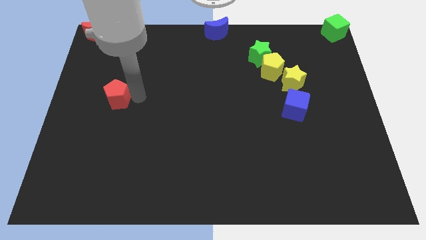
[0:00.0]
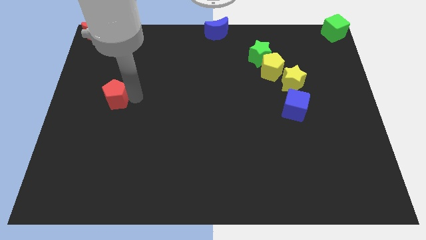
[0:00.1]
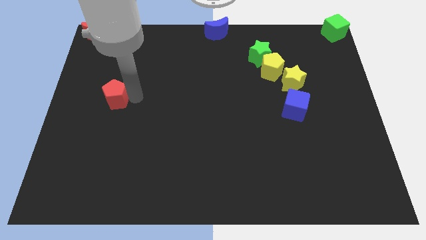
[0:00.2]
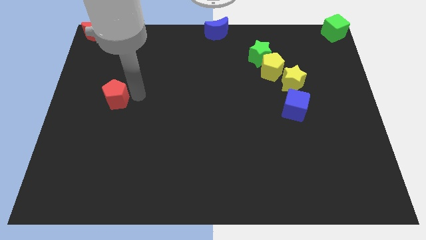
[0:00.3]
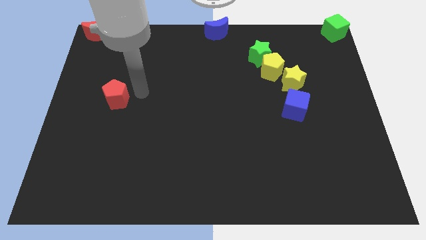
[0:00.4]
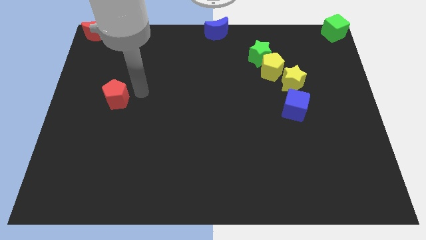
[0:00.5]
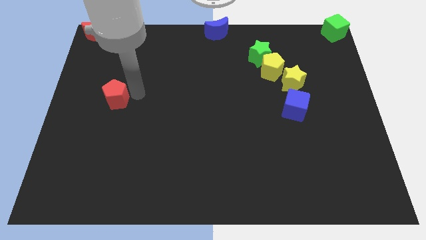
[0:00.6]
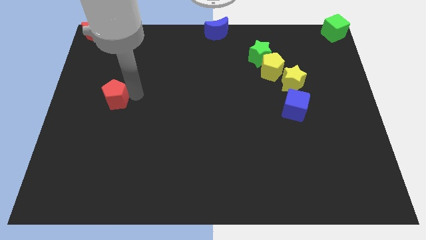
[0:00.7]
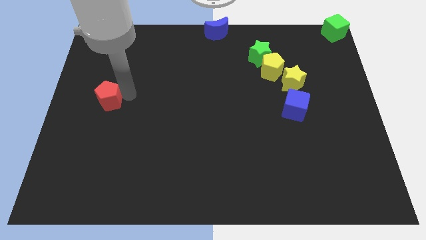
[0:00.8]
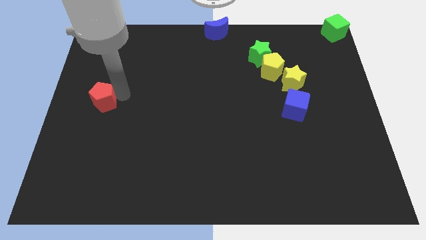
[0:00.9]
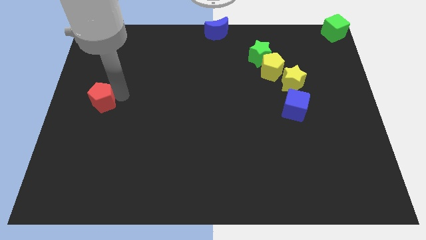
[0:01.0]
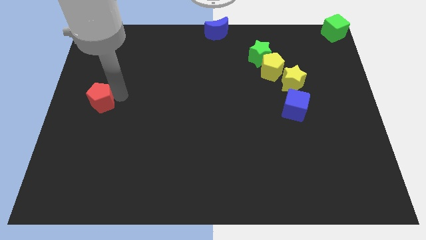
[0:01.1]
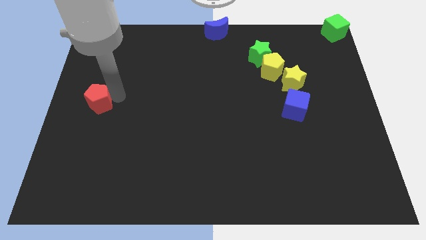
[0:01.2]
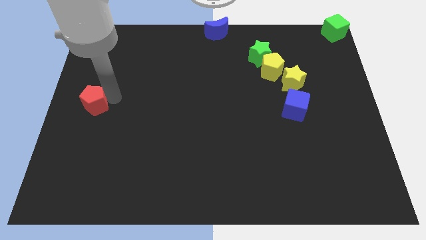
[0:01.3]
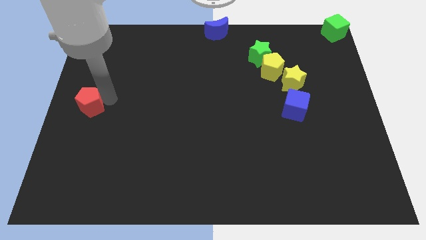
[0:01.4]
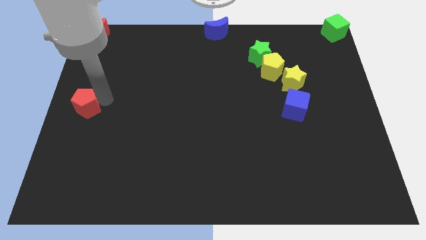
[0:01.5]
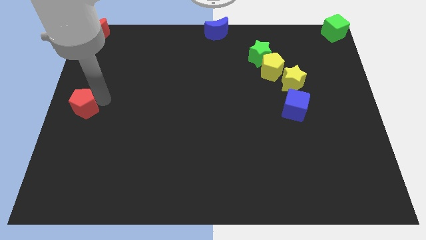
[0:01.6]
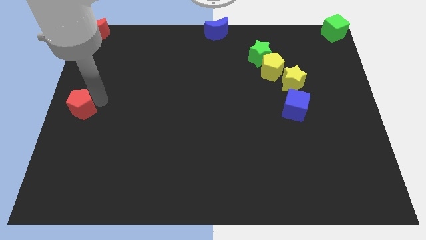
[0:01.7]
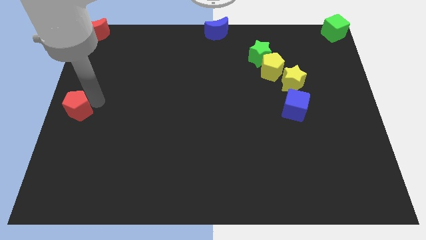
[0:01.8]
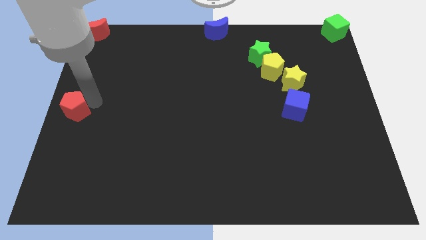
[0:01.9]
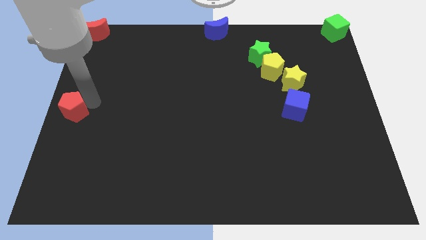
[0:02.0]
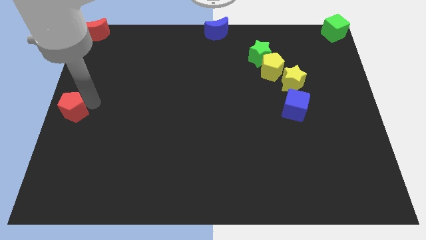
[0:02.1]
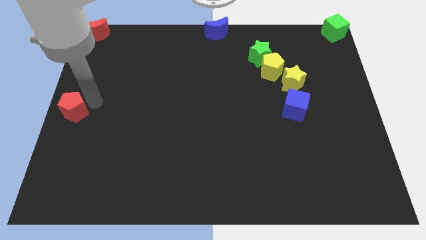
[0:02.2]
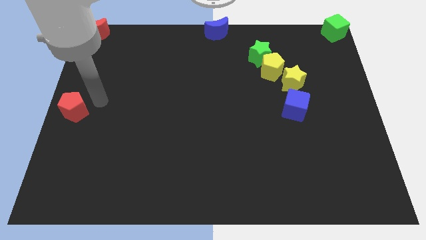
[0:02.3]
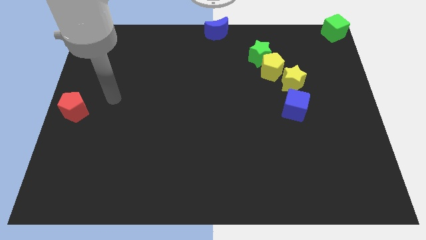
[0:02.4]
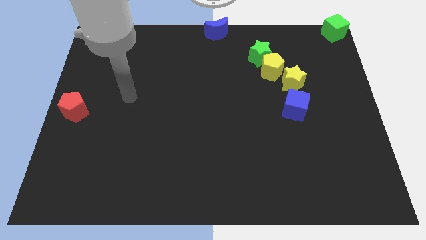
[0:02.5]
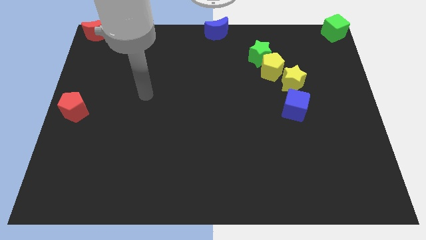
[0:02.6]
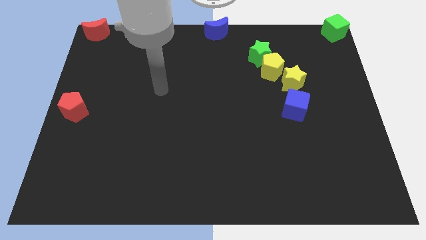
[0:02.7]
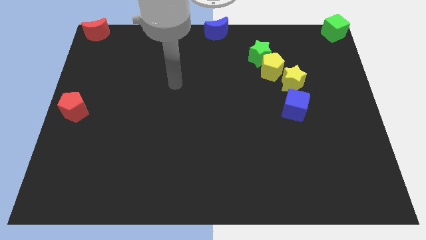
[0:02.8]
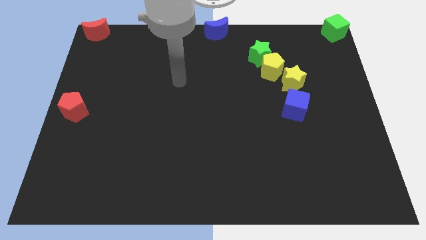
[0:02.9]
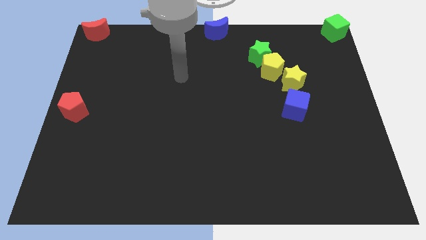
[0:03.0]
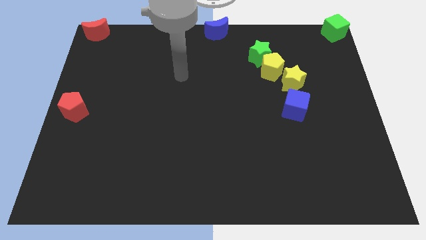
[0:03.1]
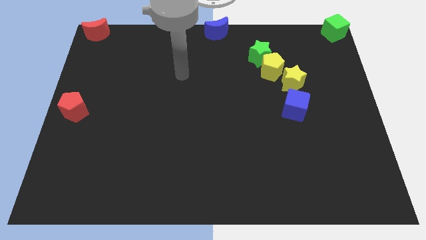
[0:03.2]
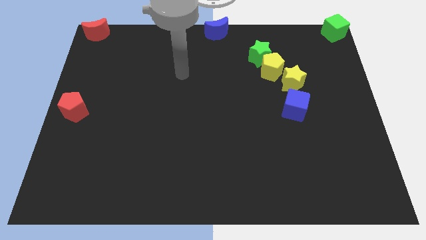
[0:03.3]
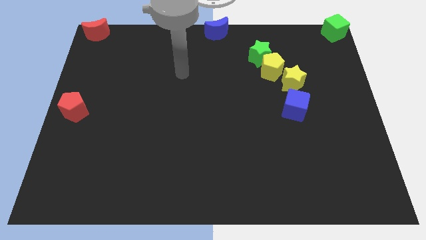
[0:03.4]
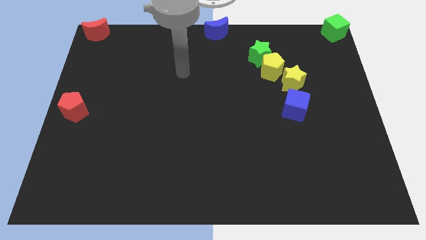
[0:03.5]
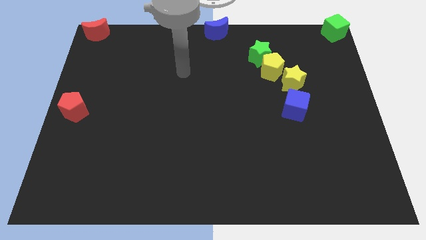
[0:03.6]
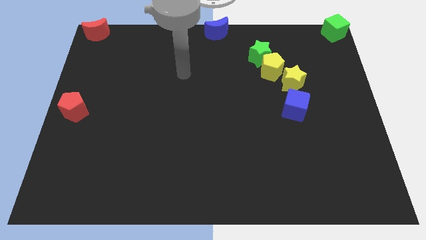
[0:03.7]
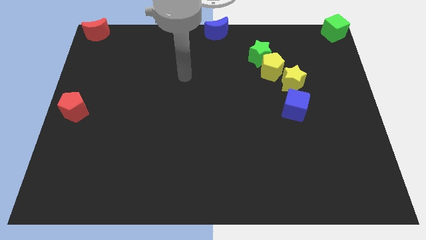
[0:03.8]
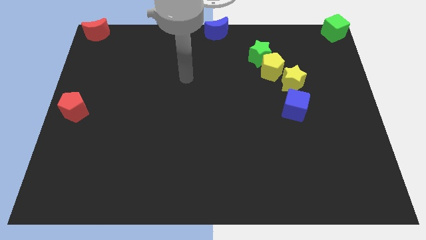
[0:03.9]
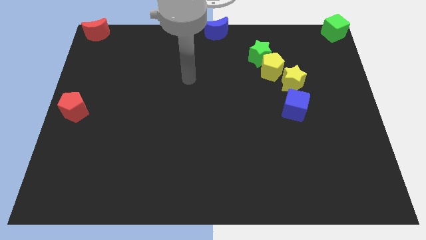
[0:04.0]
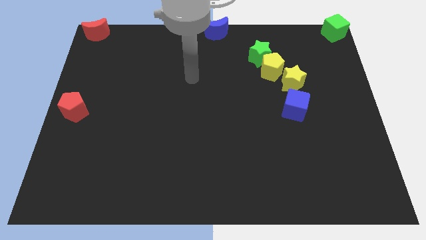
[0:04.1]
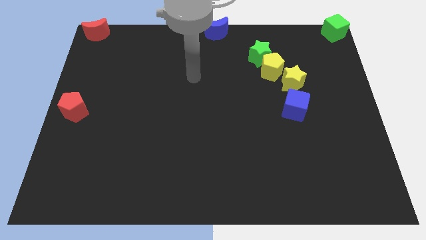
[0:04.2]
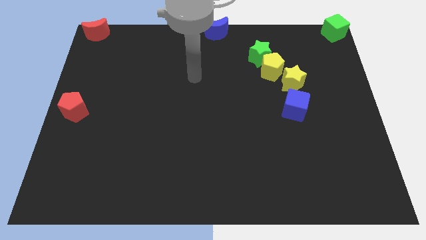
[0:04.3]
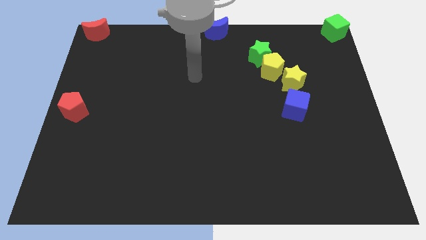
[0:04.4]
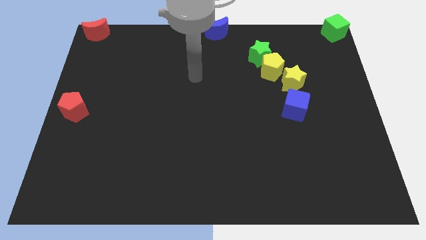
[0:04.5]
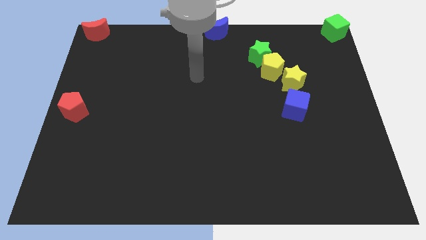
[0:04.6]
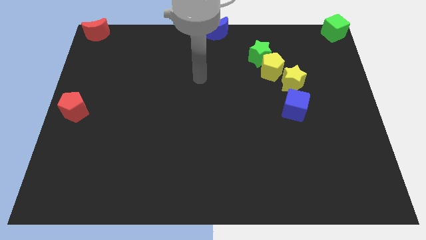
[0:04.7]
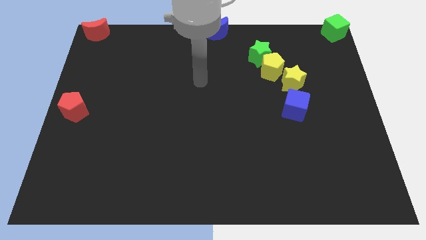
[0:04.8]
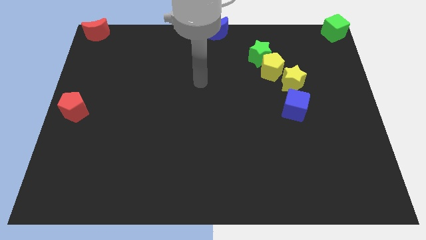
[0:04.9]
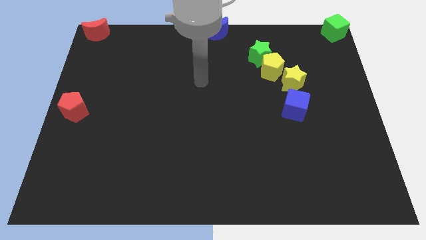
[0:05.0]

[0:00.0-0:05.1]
move the red pentagon at the center left of the table

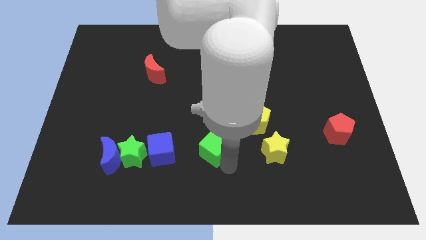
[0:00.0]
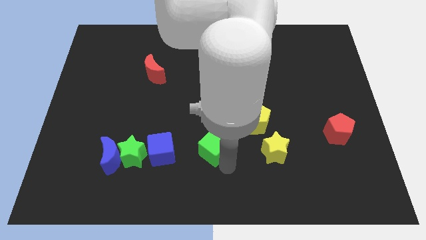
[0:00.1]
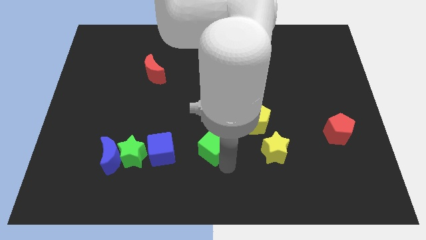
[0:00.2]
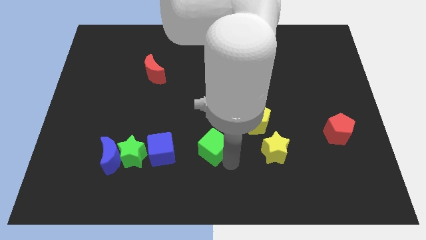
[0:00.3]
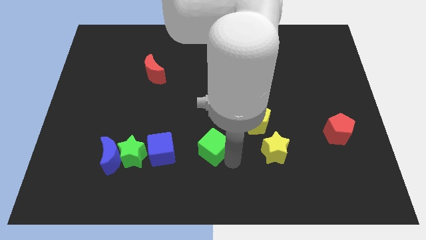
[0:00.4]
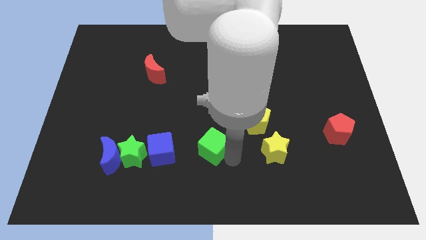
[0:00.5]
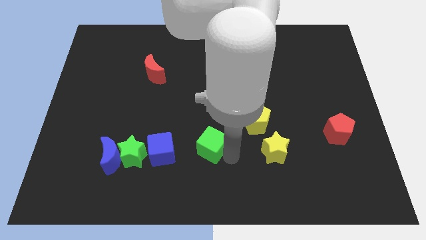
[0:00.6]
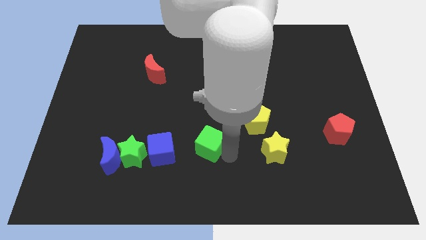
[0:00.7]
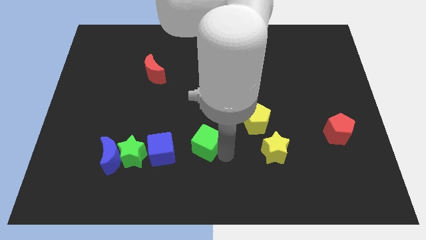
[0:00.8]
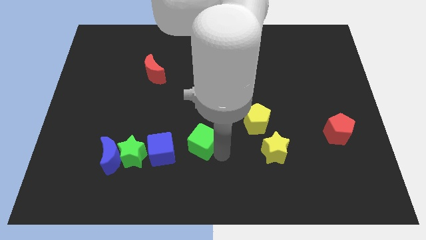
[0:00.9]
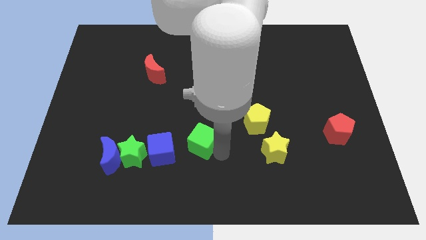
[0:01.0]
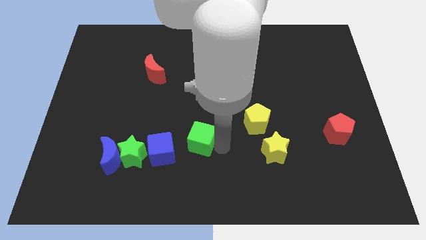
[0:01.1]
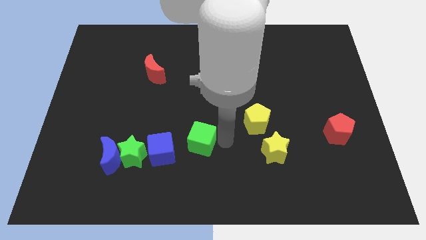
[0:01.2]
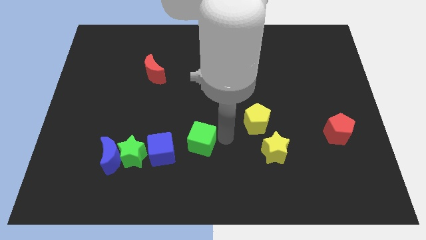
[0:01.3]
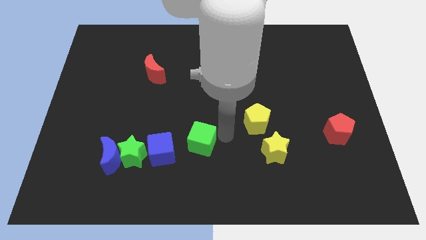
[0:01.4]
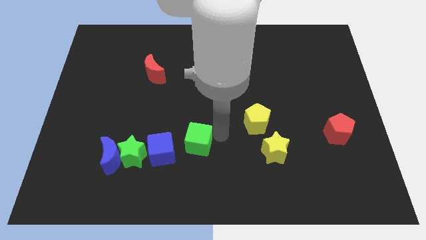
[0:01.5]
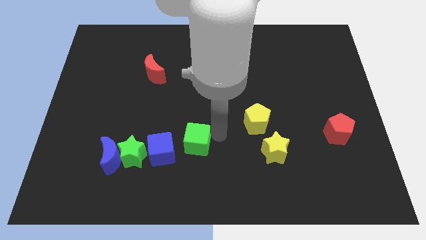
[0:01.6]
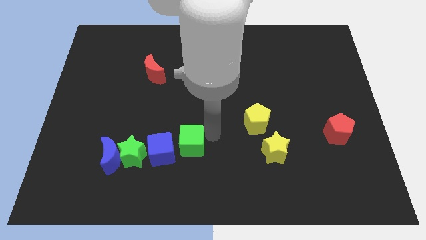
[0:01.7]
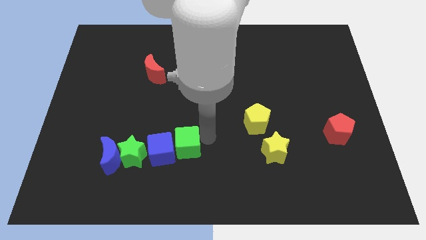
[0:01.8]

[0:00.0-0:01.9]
push the green cube to the right of the blue cube

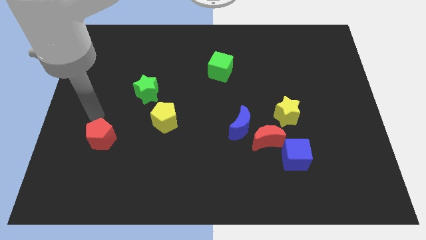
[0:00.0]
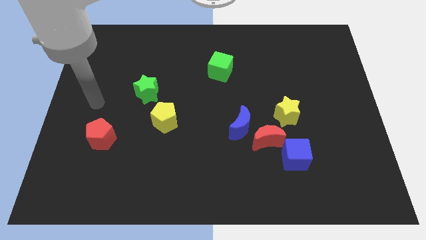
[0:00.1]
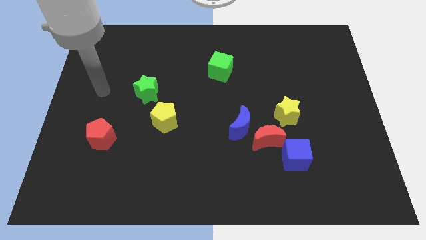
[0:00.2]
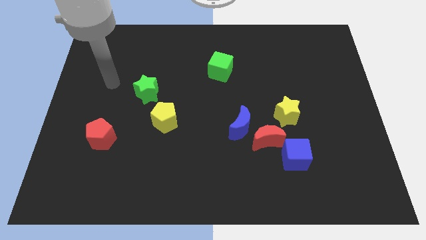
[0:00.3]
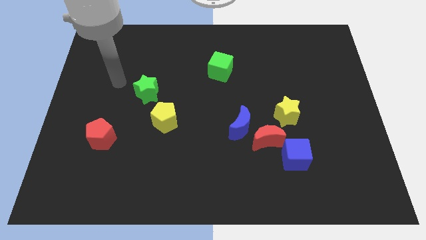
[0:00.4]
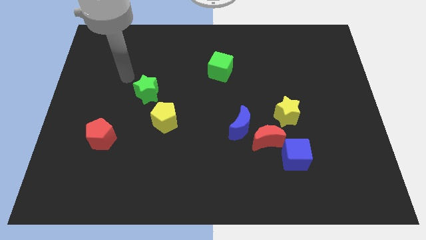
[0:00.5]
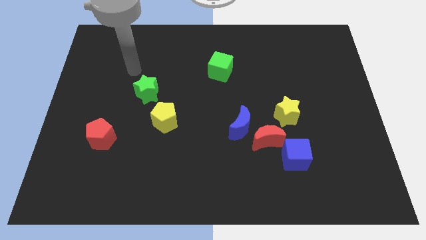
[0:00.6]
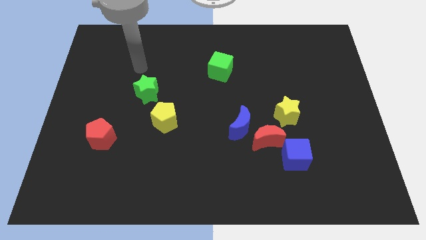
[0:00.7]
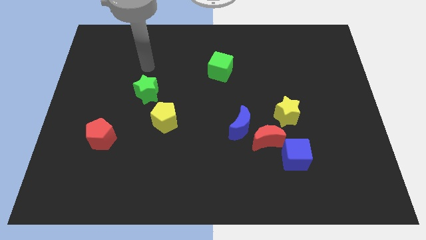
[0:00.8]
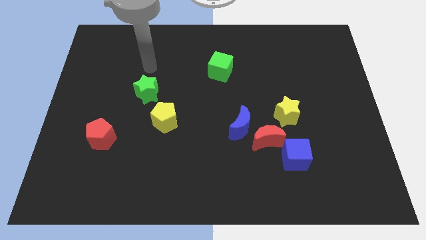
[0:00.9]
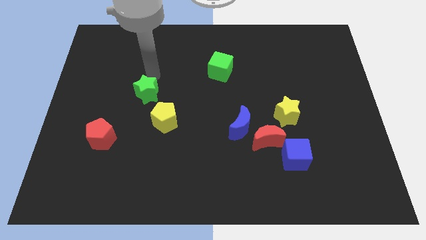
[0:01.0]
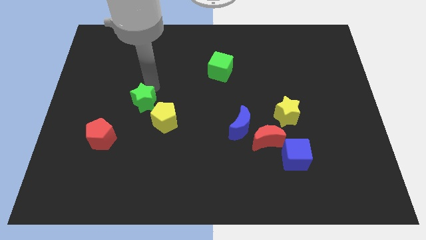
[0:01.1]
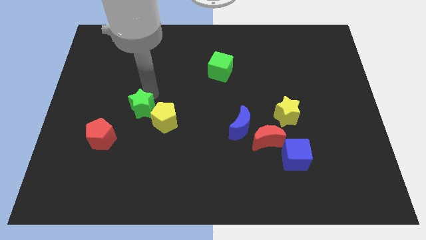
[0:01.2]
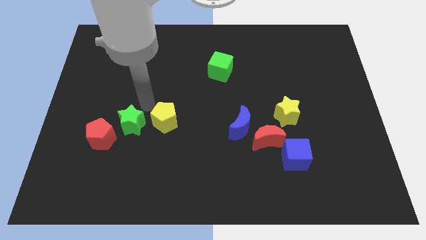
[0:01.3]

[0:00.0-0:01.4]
place the green star in between the yellow pentagon and red pentagon

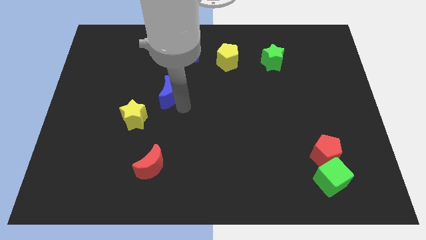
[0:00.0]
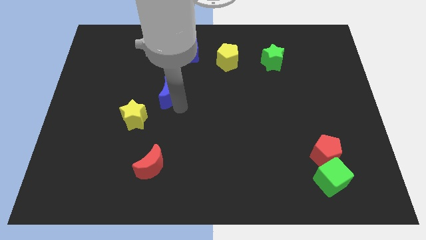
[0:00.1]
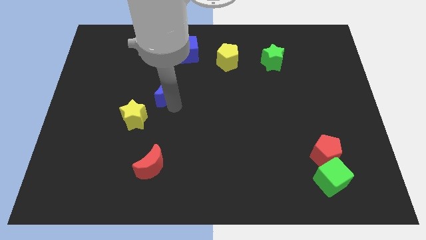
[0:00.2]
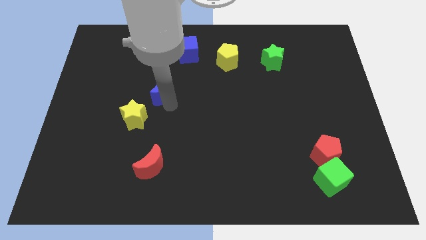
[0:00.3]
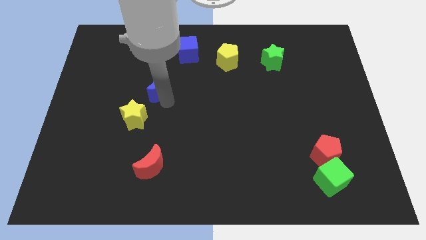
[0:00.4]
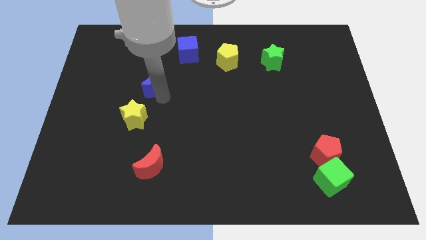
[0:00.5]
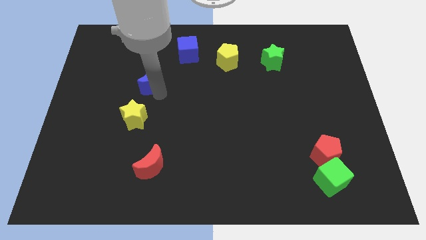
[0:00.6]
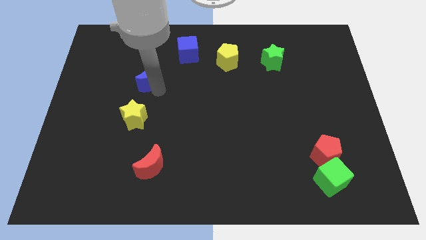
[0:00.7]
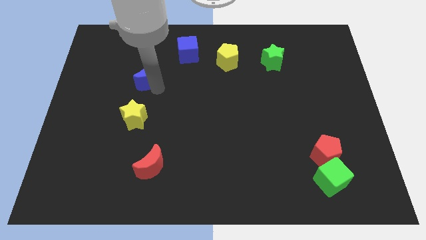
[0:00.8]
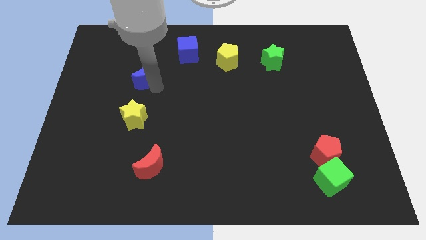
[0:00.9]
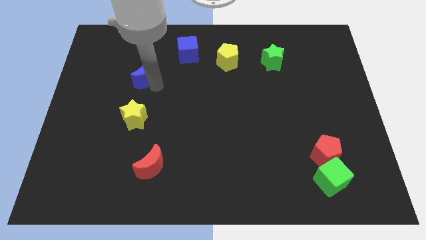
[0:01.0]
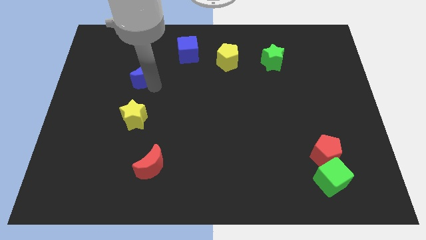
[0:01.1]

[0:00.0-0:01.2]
put the blue moon vertically above the yellow star
